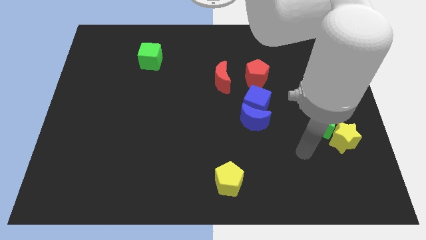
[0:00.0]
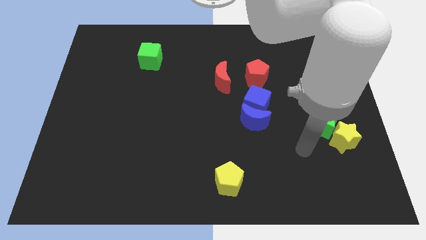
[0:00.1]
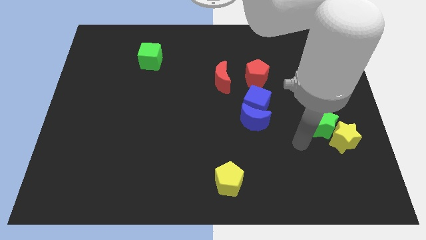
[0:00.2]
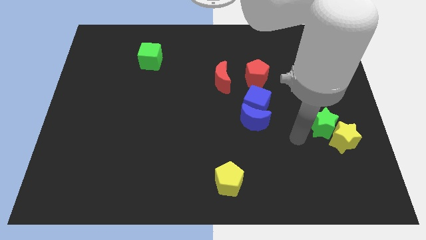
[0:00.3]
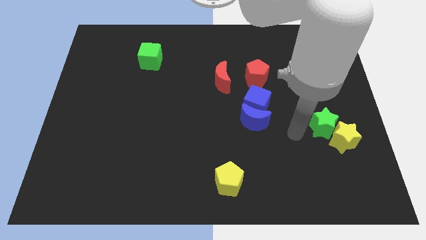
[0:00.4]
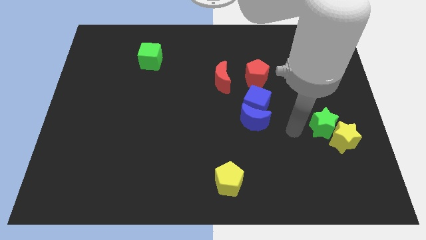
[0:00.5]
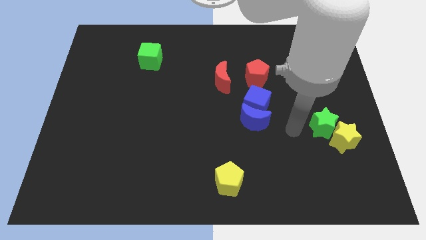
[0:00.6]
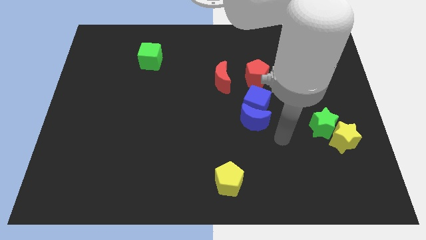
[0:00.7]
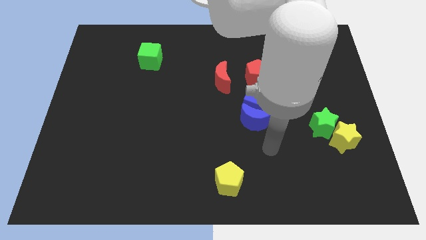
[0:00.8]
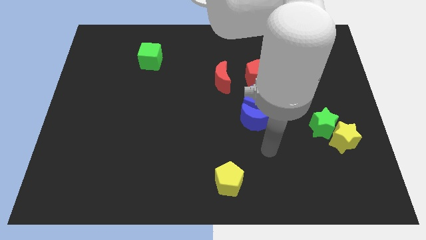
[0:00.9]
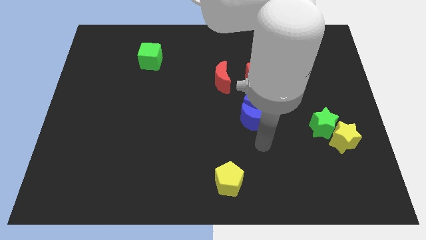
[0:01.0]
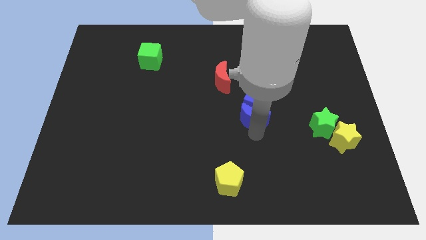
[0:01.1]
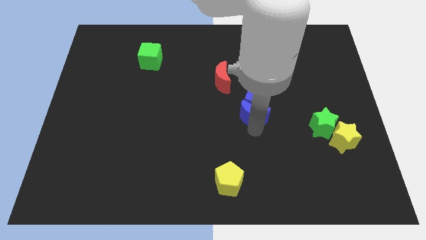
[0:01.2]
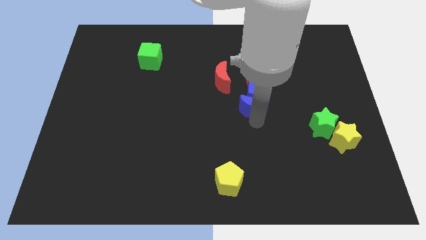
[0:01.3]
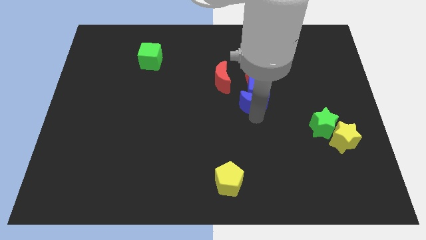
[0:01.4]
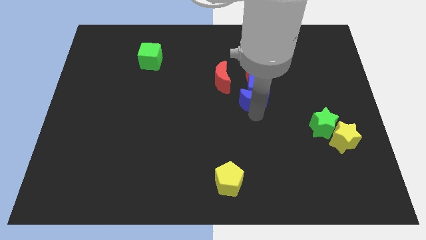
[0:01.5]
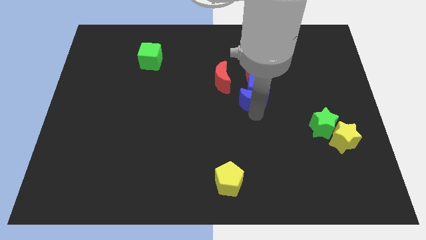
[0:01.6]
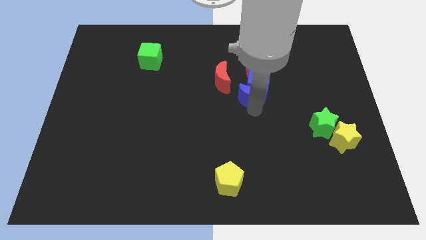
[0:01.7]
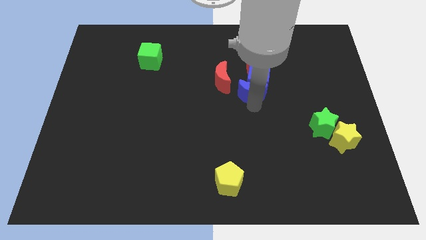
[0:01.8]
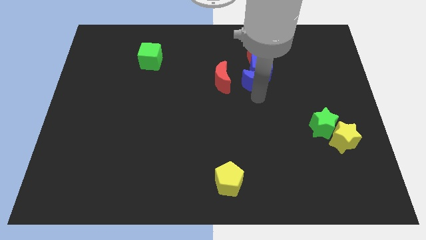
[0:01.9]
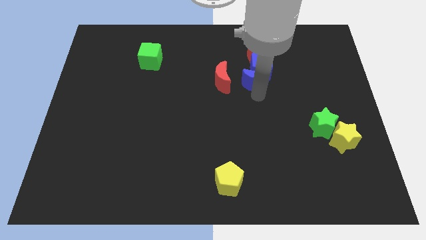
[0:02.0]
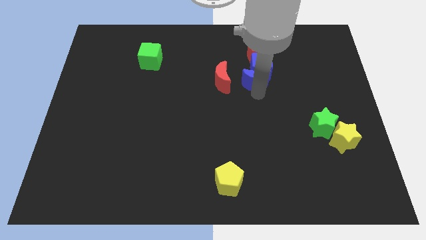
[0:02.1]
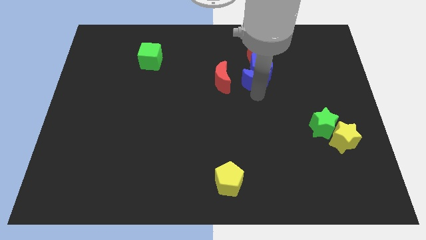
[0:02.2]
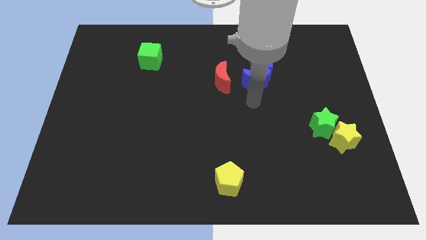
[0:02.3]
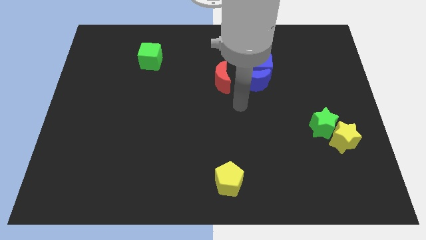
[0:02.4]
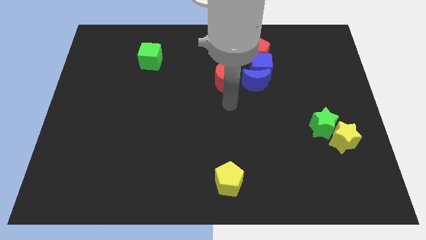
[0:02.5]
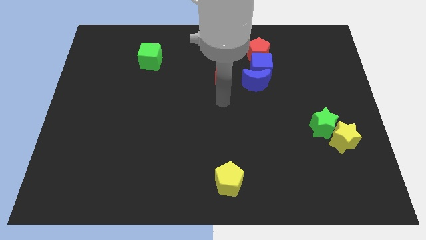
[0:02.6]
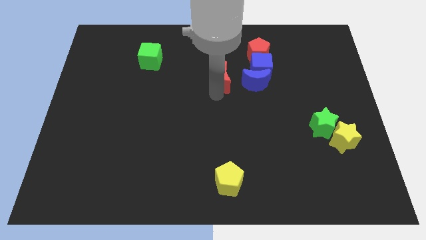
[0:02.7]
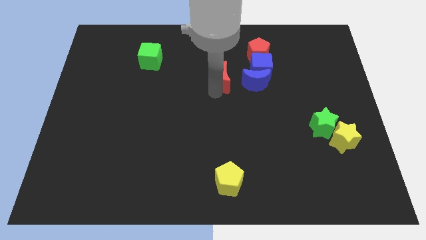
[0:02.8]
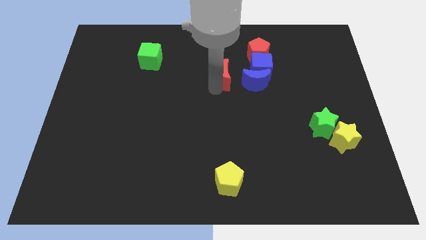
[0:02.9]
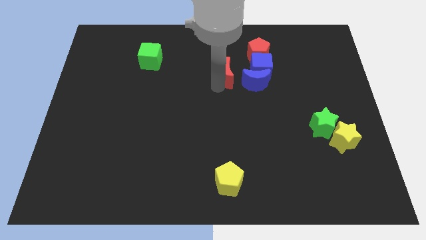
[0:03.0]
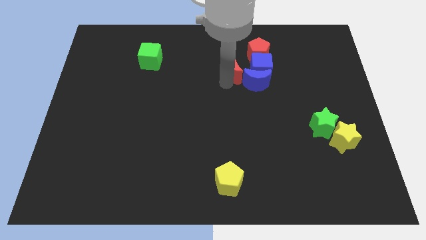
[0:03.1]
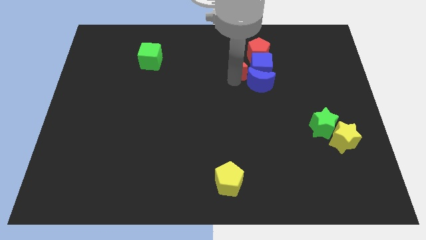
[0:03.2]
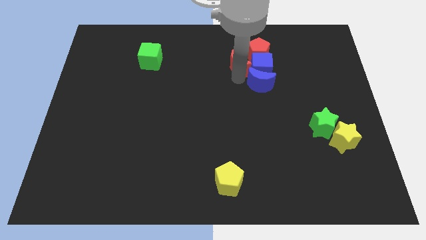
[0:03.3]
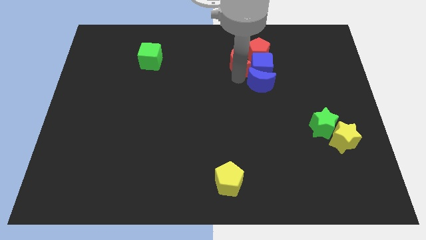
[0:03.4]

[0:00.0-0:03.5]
move the red crescent towards the left side of the blue cube

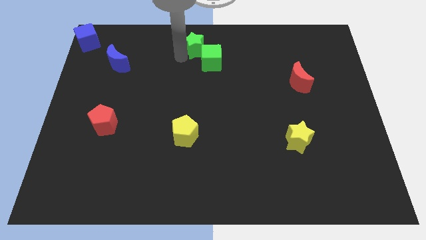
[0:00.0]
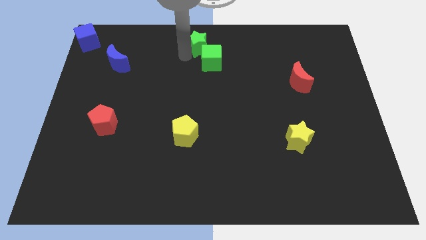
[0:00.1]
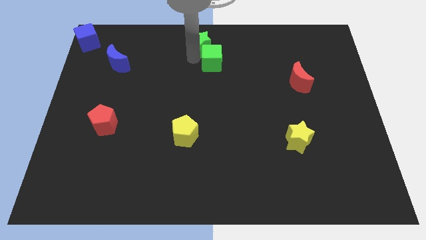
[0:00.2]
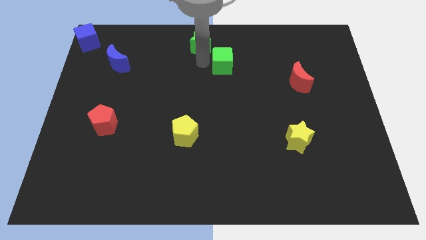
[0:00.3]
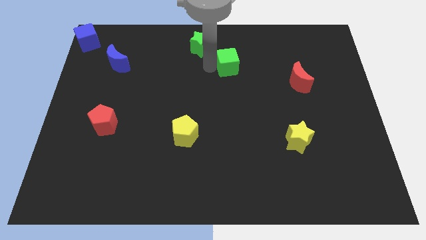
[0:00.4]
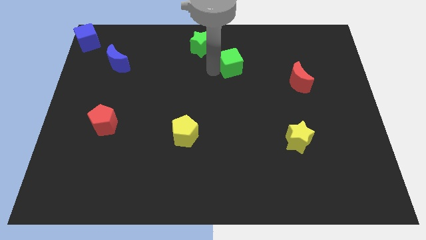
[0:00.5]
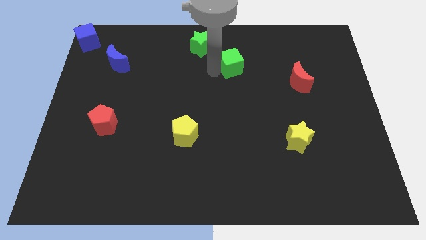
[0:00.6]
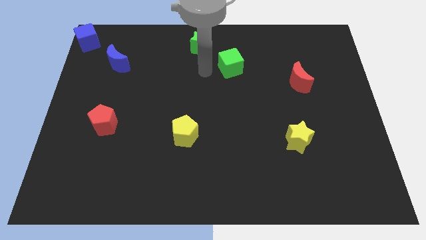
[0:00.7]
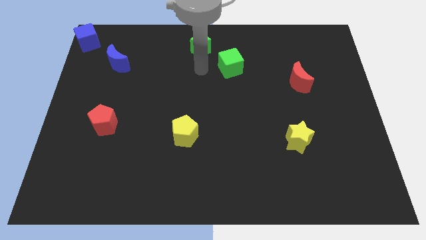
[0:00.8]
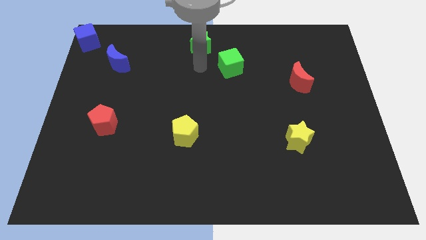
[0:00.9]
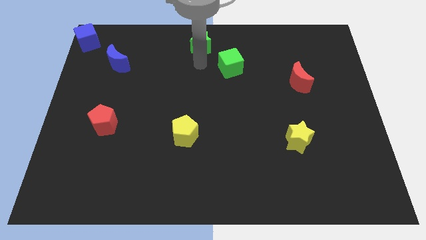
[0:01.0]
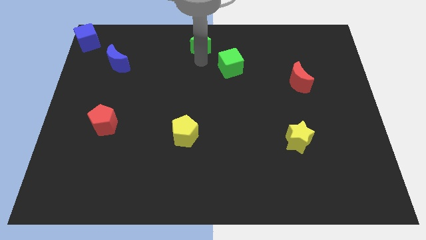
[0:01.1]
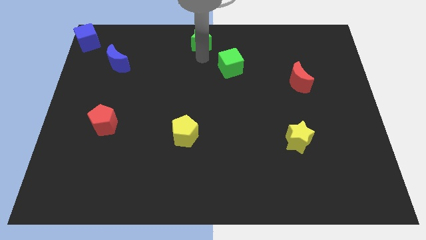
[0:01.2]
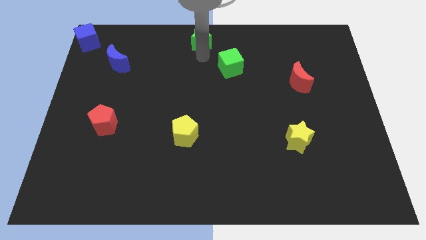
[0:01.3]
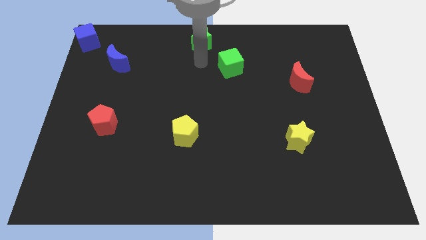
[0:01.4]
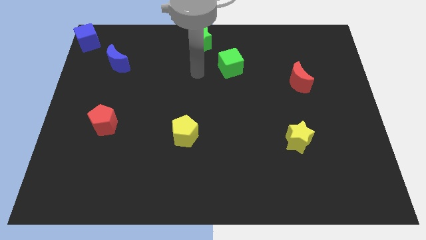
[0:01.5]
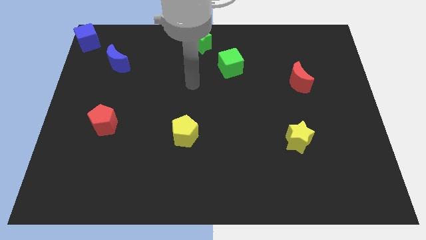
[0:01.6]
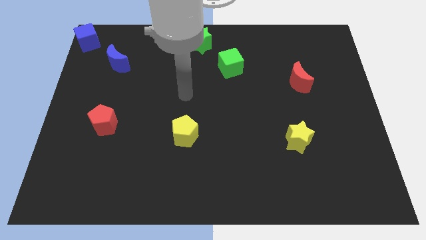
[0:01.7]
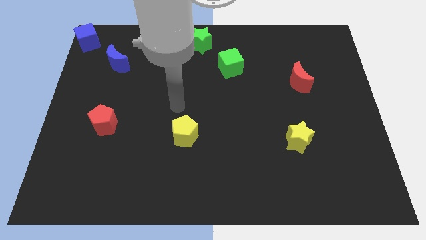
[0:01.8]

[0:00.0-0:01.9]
separate green star and the green cube

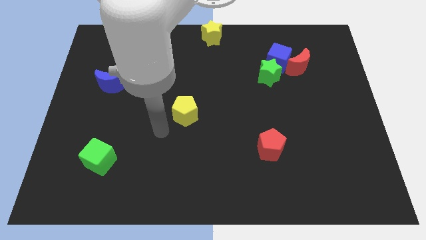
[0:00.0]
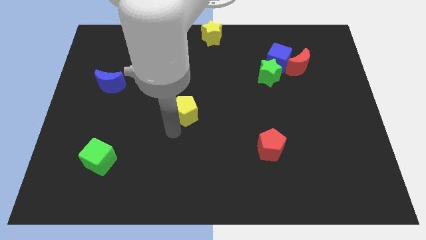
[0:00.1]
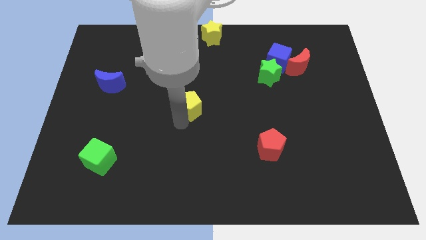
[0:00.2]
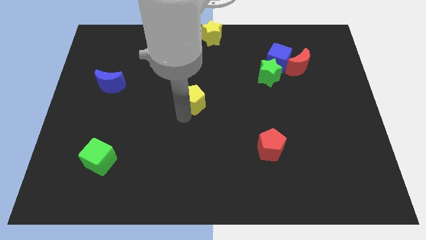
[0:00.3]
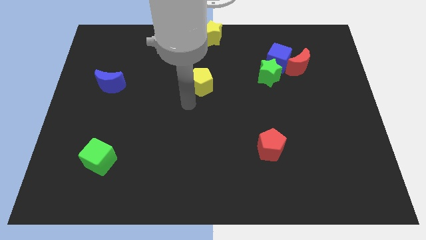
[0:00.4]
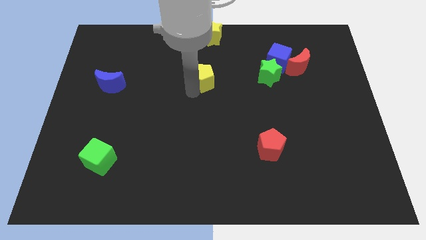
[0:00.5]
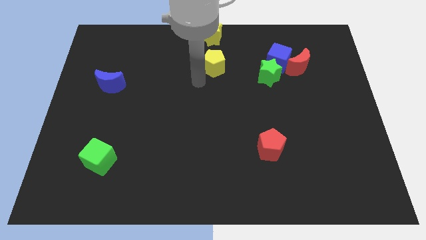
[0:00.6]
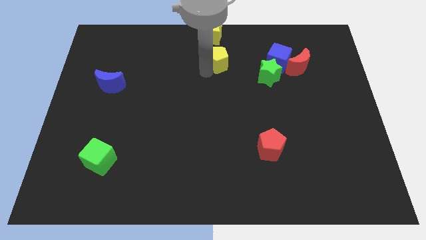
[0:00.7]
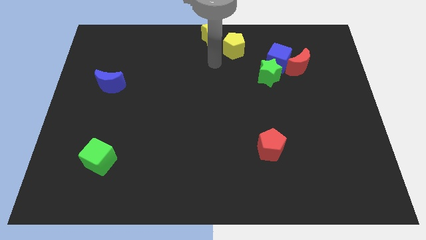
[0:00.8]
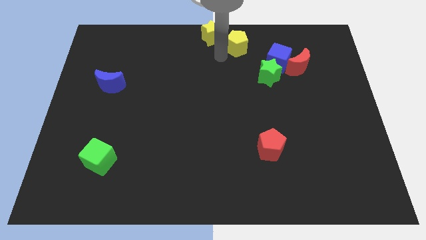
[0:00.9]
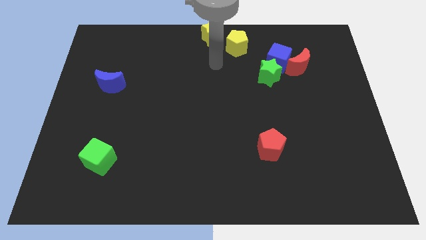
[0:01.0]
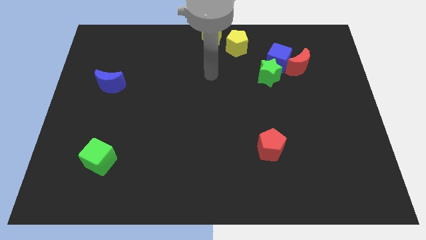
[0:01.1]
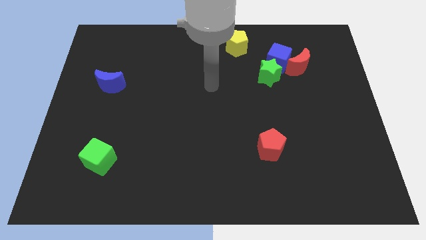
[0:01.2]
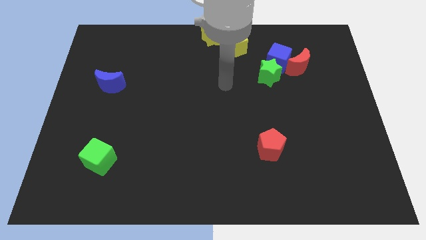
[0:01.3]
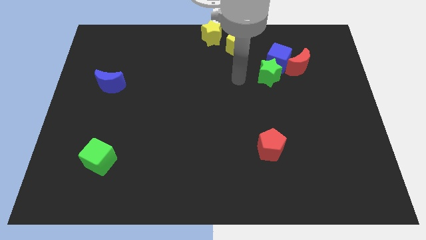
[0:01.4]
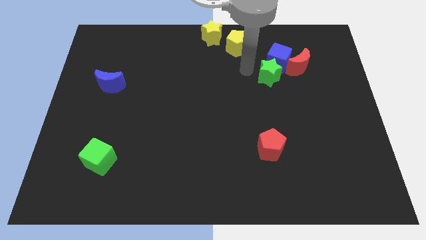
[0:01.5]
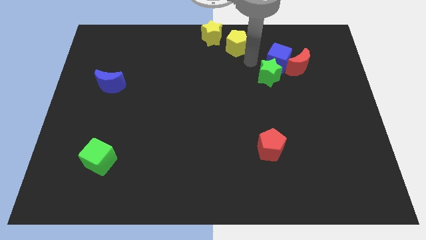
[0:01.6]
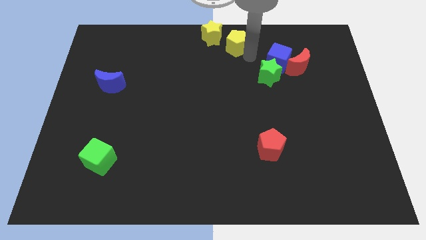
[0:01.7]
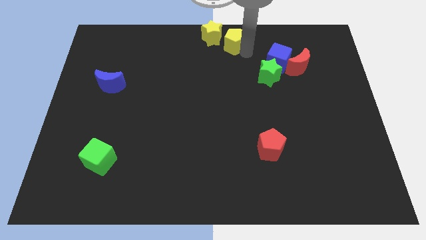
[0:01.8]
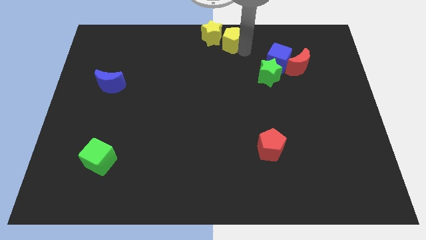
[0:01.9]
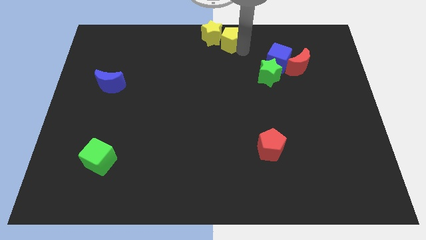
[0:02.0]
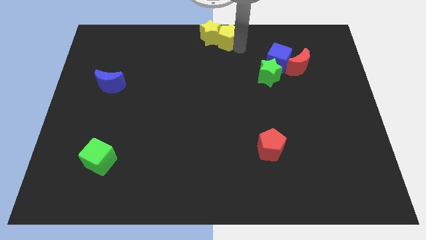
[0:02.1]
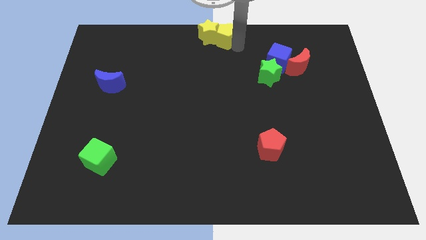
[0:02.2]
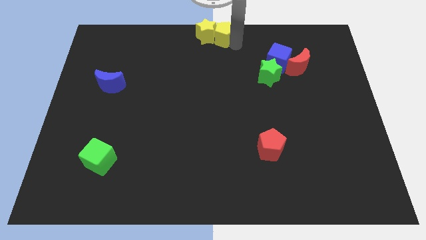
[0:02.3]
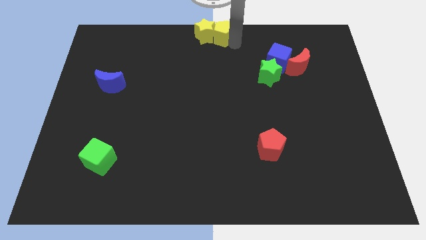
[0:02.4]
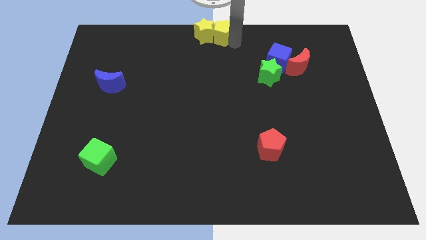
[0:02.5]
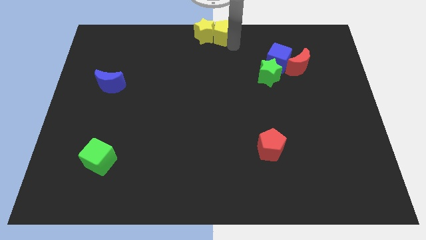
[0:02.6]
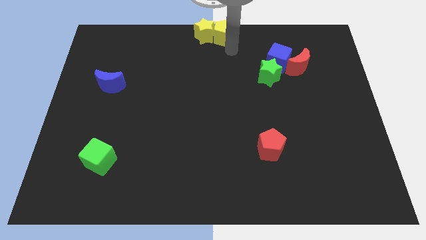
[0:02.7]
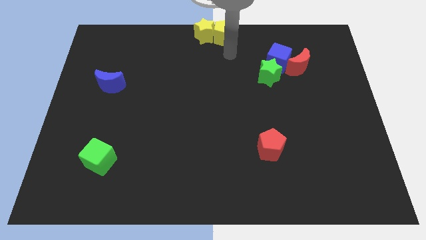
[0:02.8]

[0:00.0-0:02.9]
push yellow pentagon in yellow star

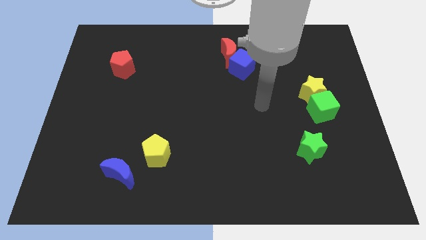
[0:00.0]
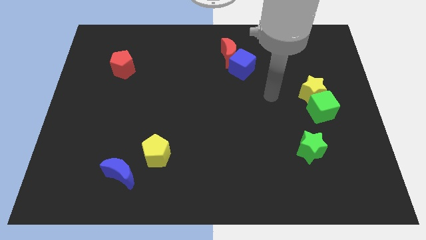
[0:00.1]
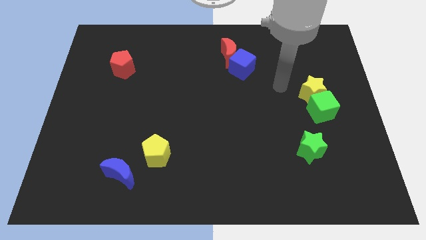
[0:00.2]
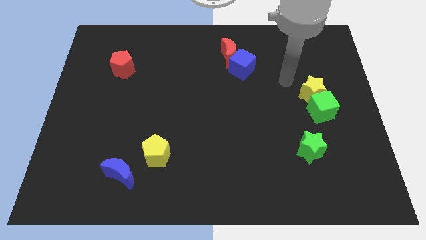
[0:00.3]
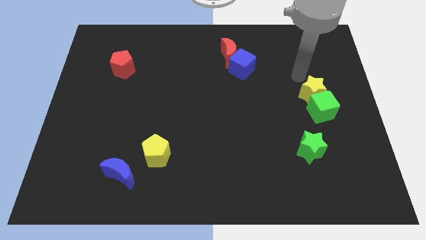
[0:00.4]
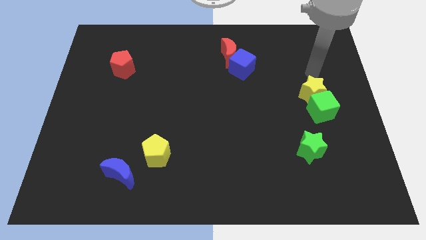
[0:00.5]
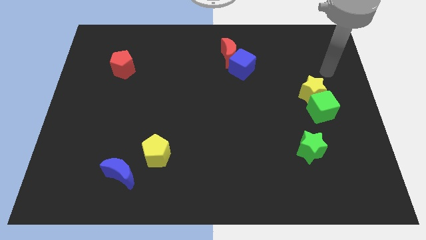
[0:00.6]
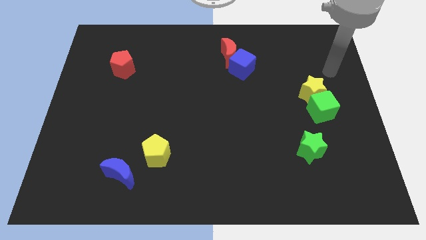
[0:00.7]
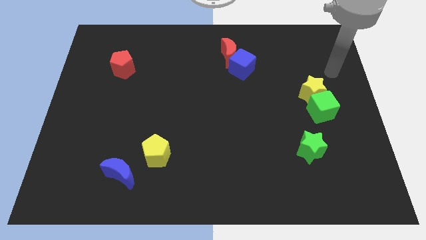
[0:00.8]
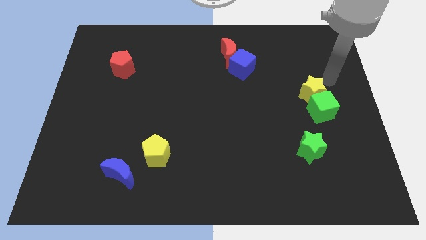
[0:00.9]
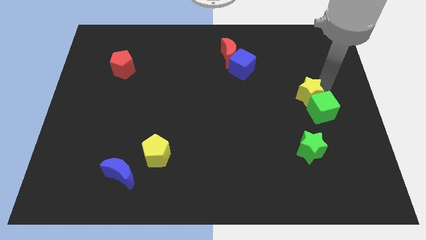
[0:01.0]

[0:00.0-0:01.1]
place your arm to the right side of yellow star
